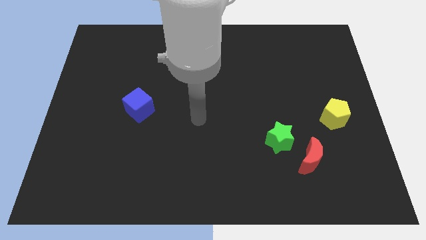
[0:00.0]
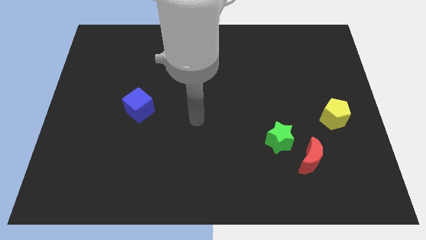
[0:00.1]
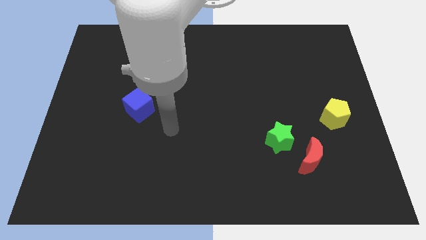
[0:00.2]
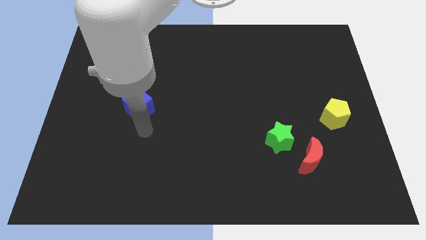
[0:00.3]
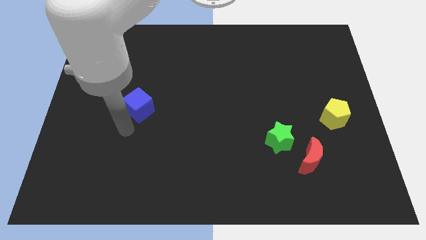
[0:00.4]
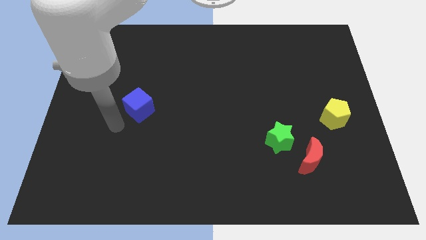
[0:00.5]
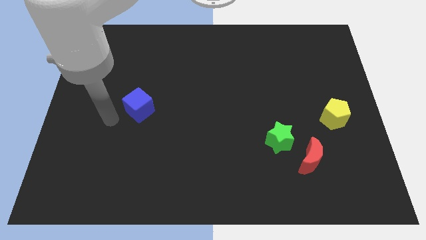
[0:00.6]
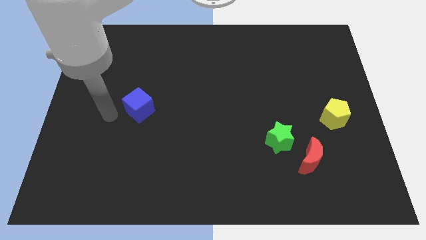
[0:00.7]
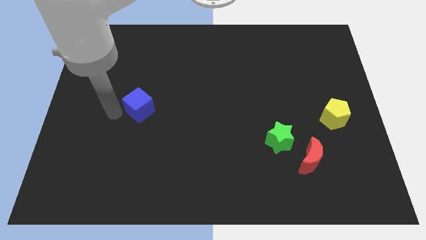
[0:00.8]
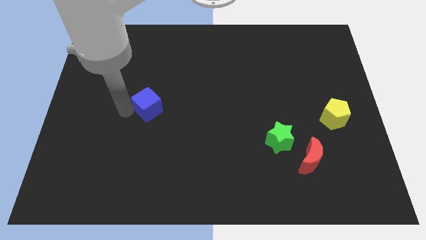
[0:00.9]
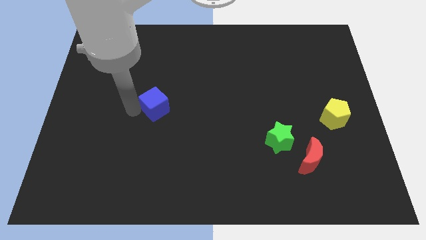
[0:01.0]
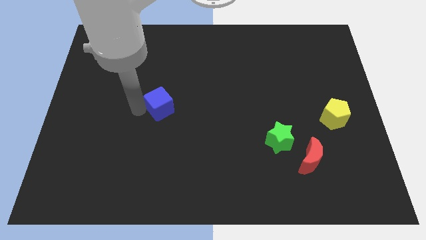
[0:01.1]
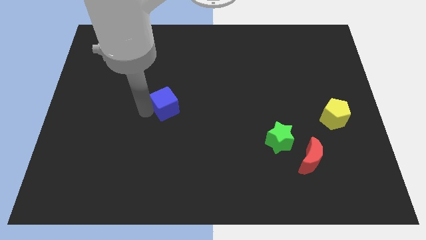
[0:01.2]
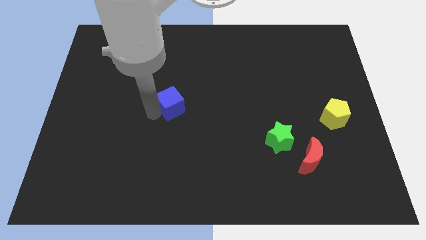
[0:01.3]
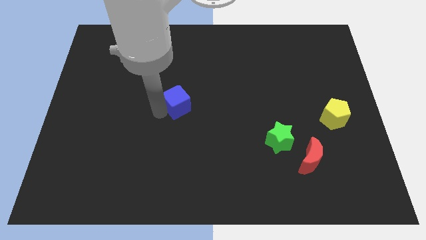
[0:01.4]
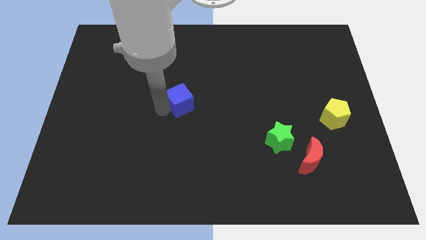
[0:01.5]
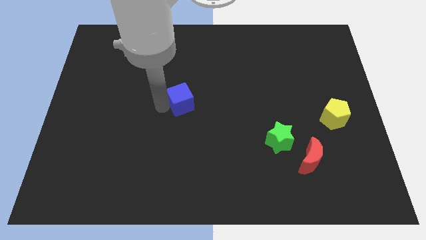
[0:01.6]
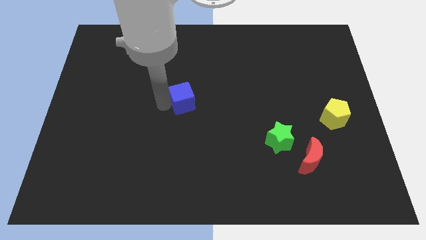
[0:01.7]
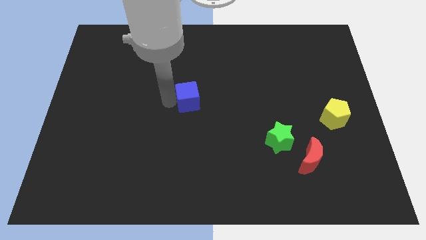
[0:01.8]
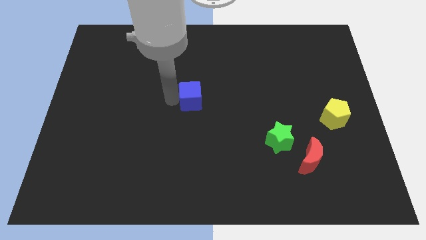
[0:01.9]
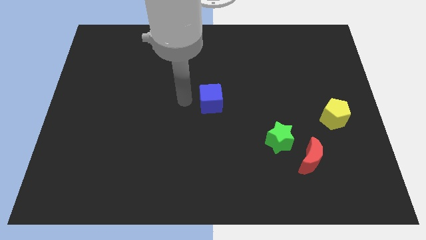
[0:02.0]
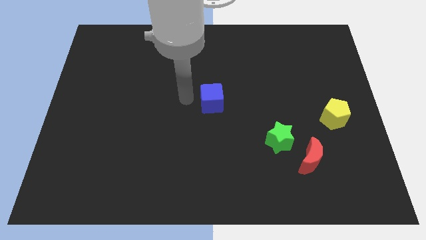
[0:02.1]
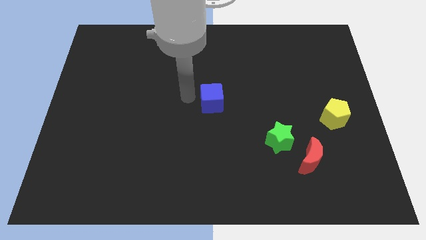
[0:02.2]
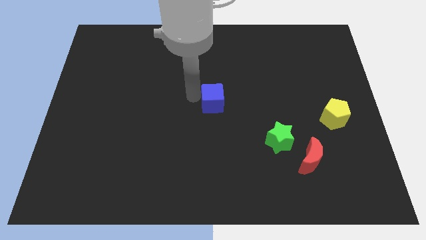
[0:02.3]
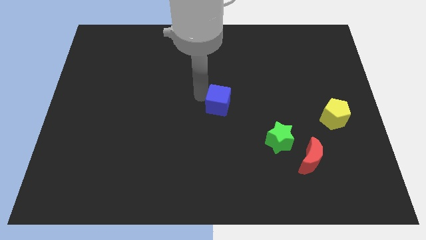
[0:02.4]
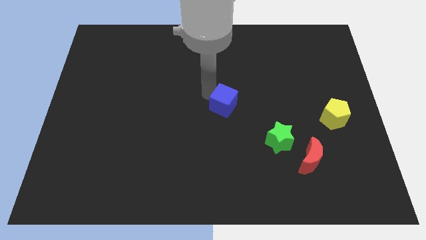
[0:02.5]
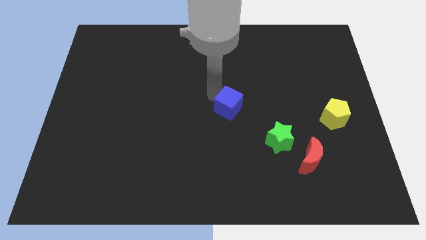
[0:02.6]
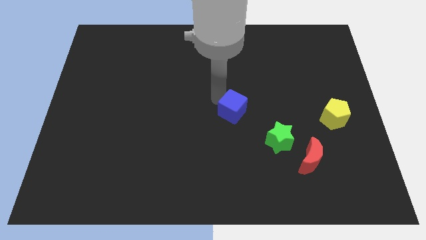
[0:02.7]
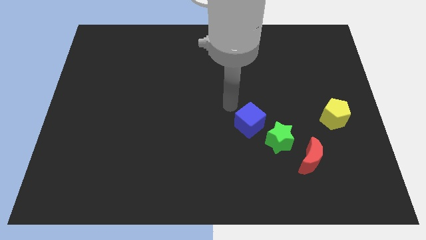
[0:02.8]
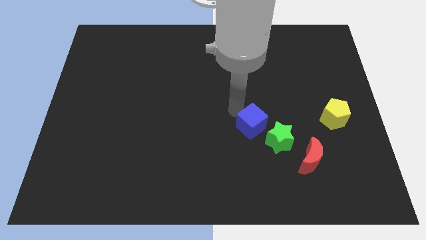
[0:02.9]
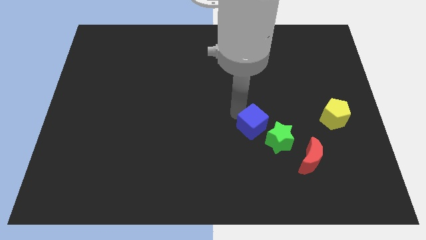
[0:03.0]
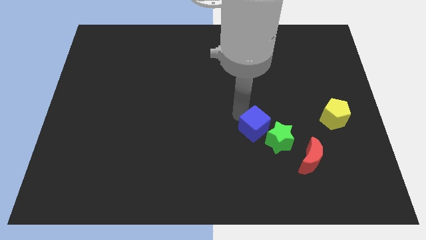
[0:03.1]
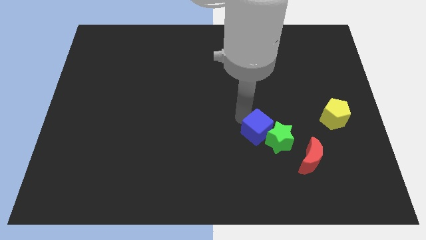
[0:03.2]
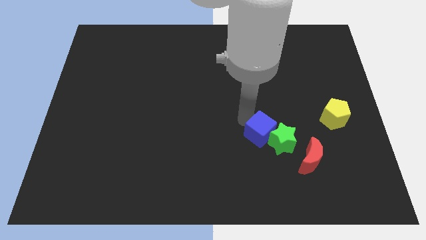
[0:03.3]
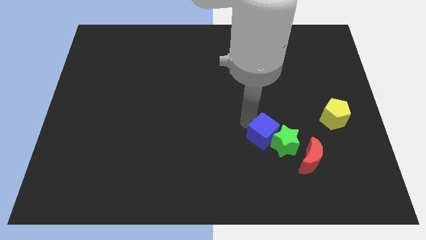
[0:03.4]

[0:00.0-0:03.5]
put the cube towards the green star

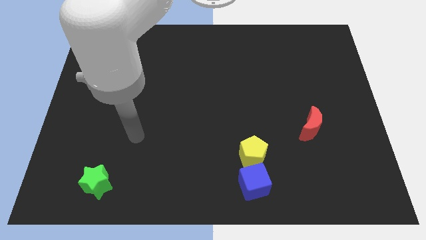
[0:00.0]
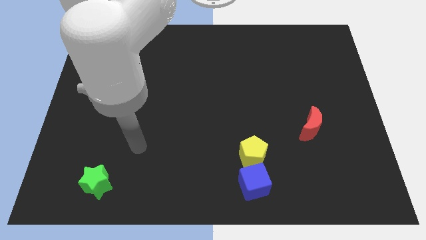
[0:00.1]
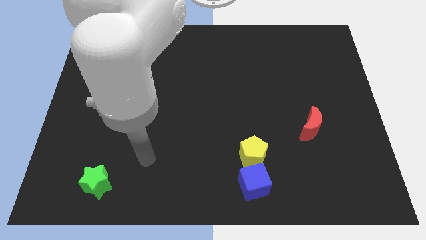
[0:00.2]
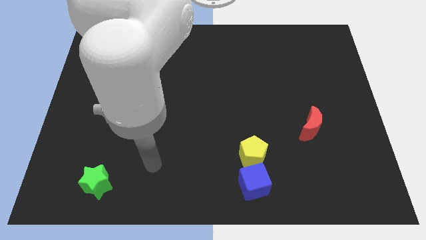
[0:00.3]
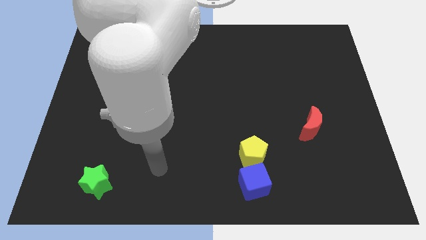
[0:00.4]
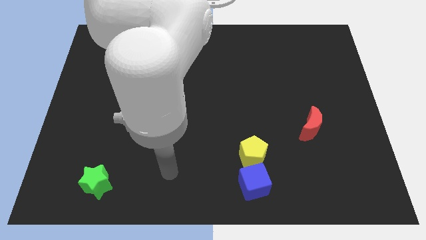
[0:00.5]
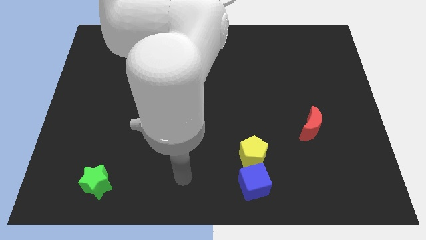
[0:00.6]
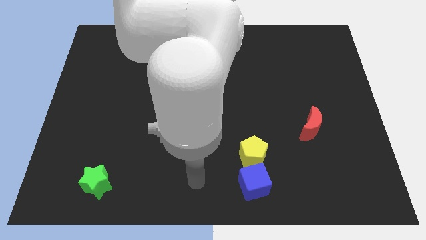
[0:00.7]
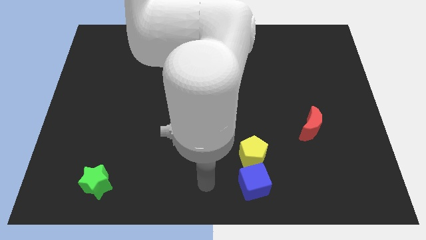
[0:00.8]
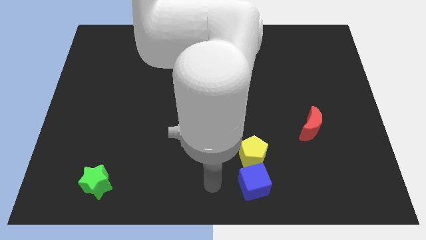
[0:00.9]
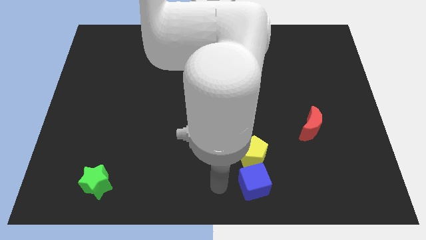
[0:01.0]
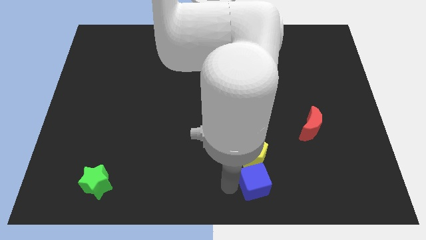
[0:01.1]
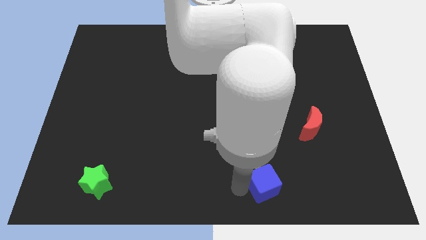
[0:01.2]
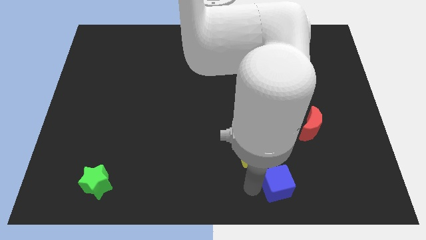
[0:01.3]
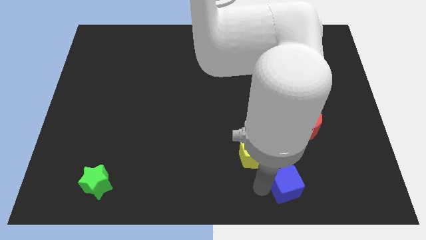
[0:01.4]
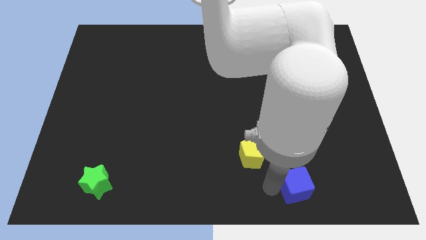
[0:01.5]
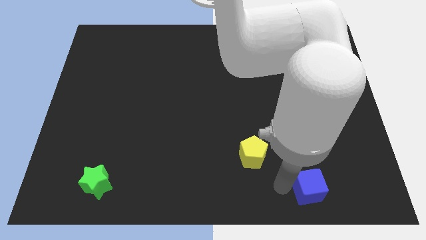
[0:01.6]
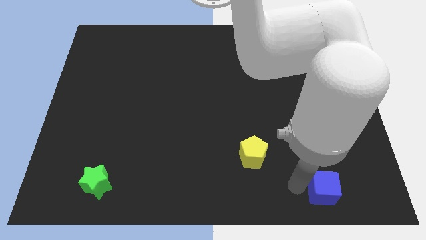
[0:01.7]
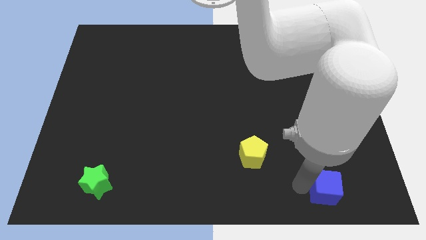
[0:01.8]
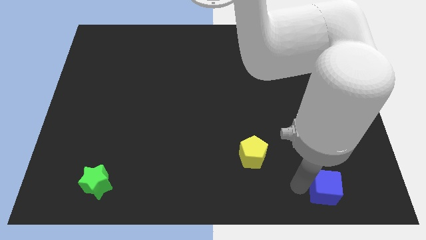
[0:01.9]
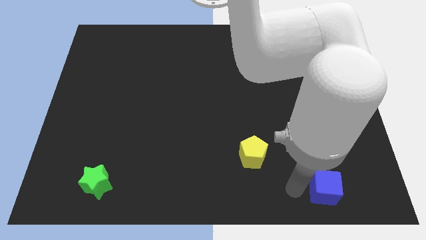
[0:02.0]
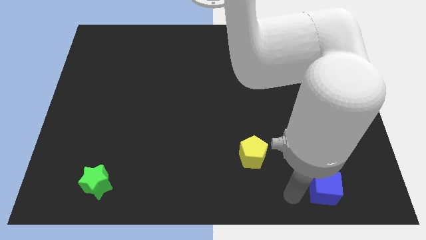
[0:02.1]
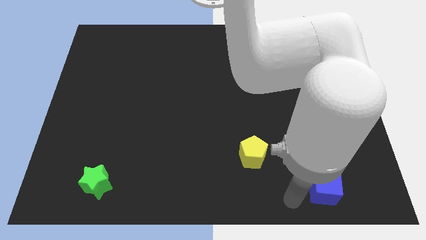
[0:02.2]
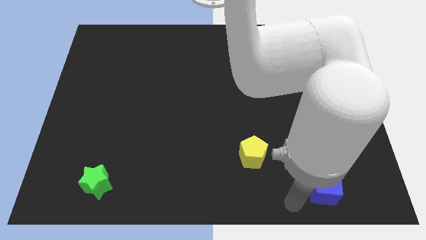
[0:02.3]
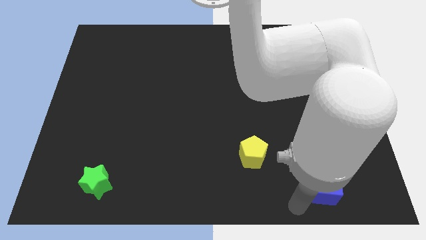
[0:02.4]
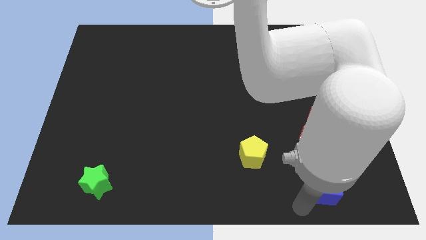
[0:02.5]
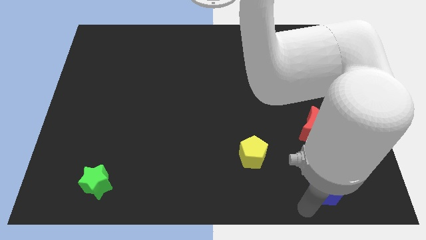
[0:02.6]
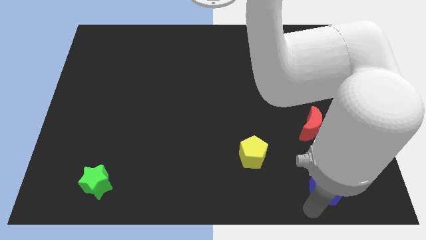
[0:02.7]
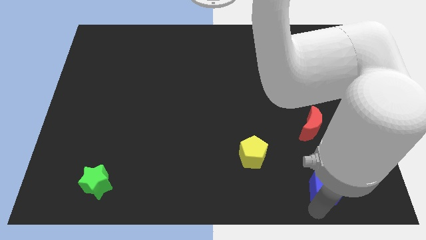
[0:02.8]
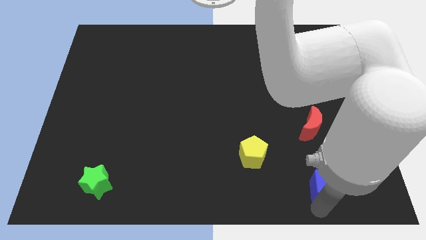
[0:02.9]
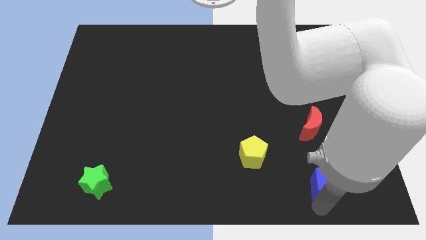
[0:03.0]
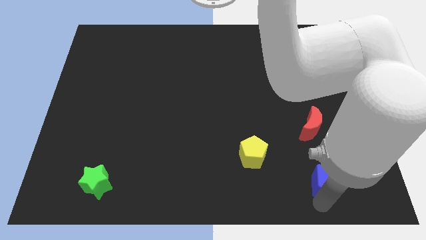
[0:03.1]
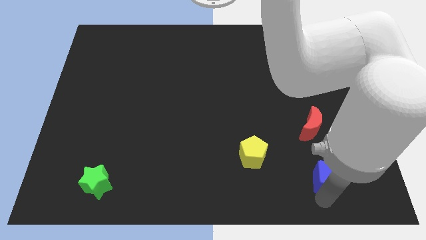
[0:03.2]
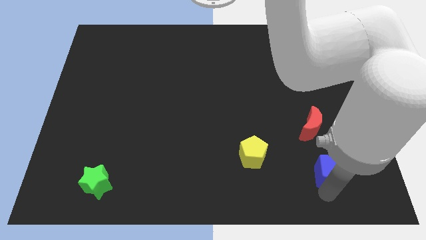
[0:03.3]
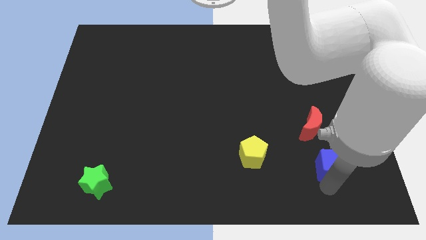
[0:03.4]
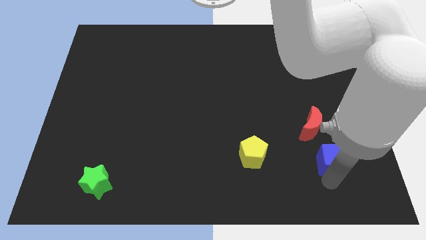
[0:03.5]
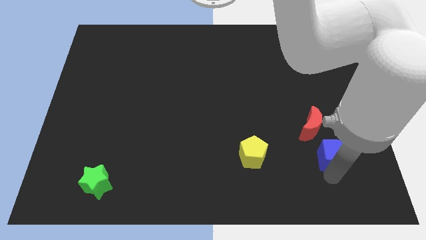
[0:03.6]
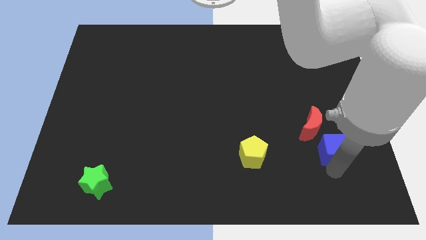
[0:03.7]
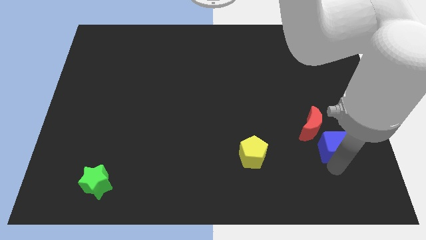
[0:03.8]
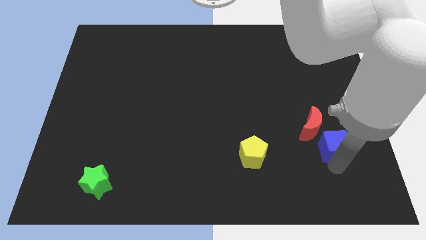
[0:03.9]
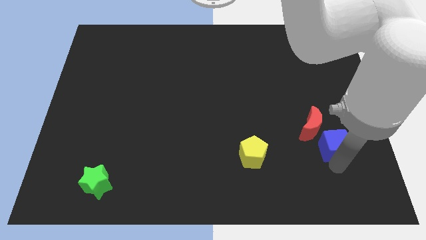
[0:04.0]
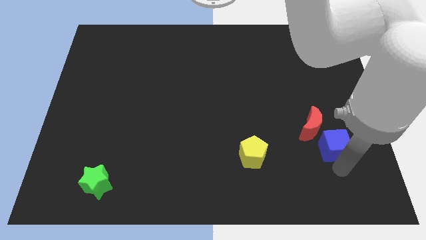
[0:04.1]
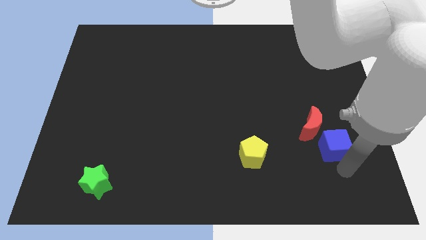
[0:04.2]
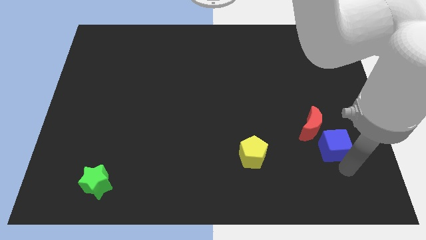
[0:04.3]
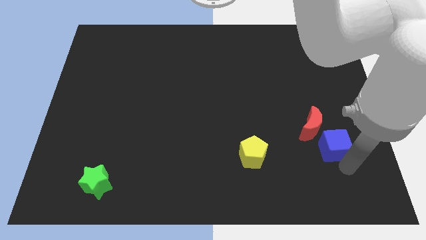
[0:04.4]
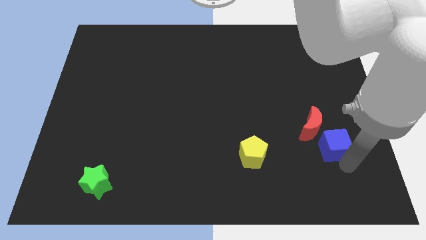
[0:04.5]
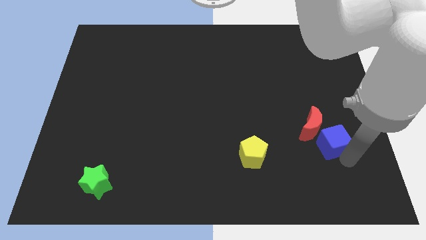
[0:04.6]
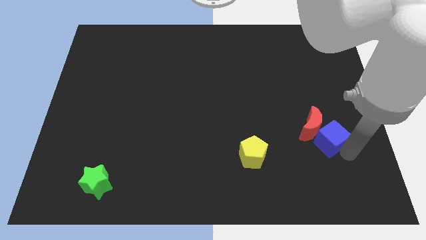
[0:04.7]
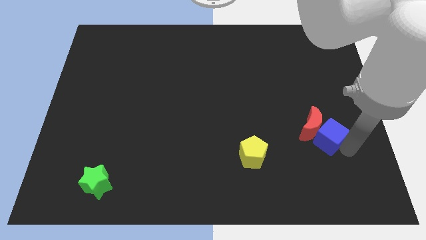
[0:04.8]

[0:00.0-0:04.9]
move the cube towards the red block
